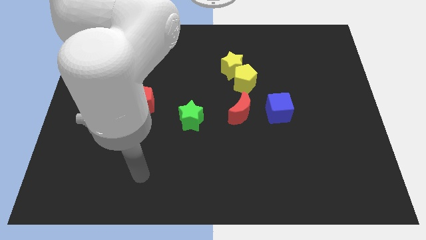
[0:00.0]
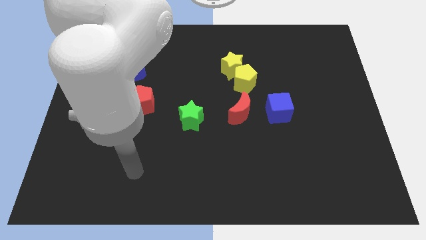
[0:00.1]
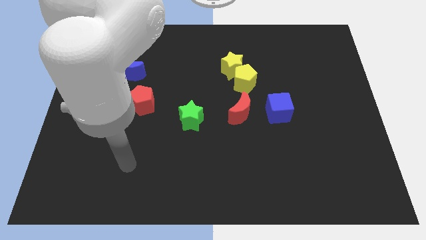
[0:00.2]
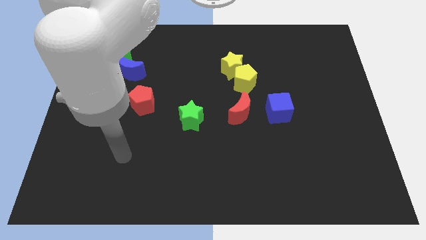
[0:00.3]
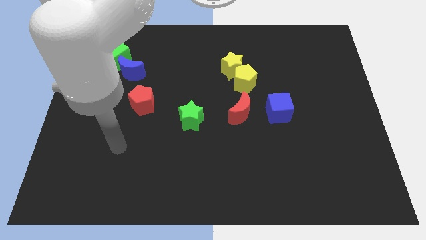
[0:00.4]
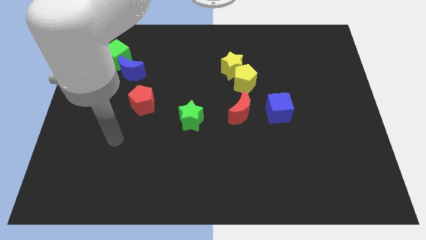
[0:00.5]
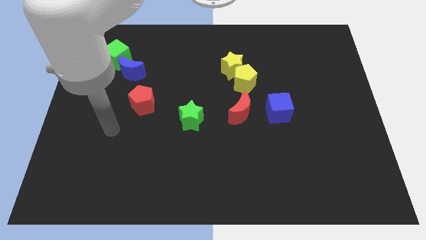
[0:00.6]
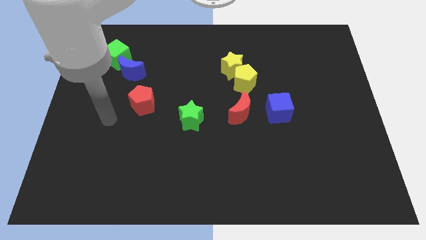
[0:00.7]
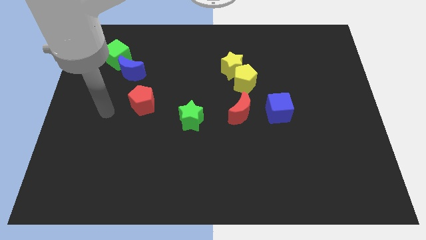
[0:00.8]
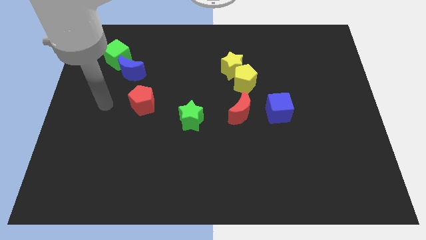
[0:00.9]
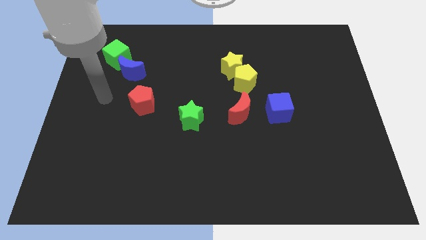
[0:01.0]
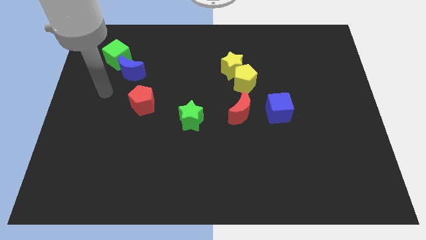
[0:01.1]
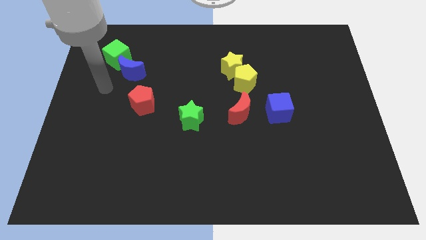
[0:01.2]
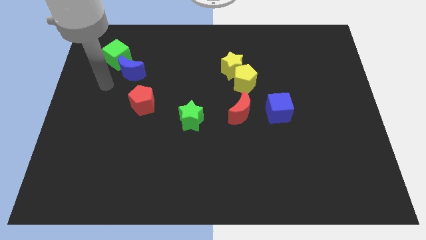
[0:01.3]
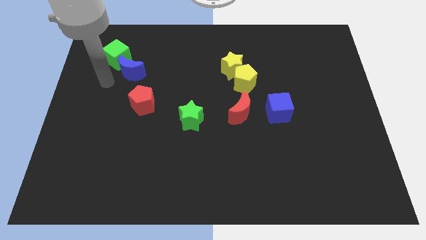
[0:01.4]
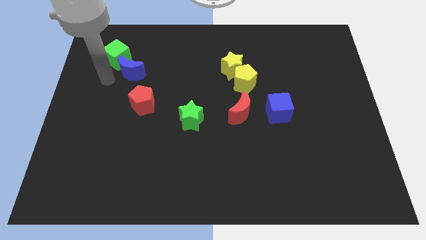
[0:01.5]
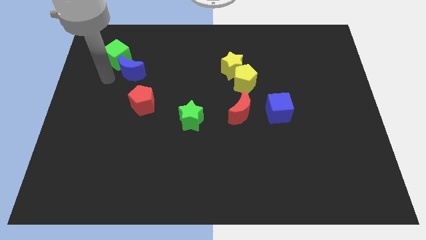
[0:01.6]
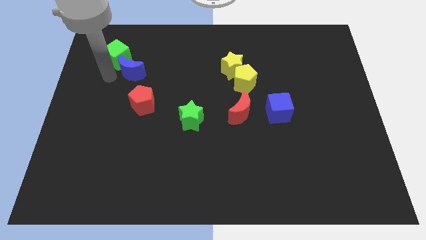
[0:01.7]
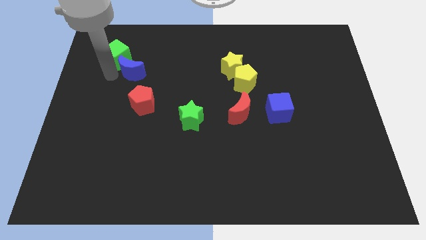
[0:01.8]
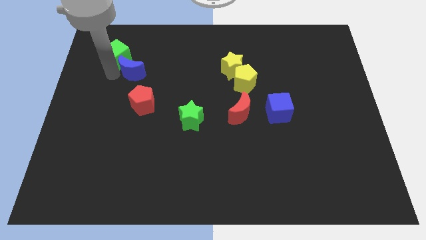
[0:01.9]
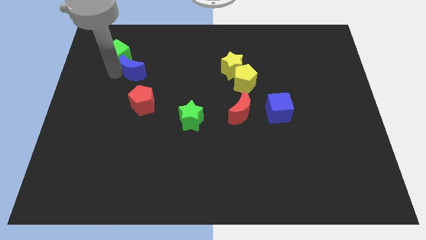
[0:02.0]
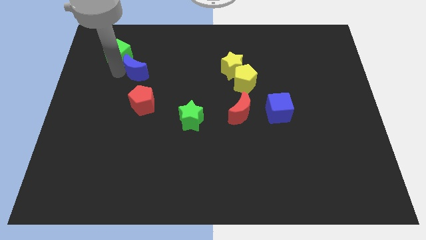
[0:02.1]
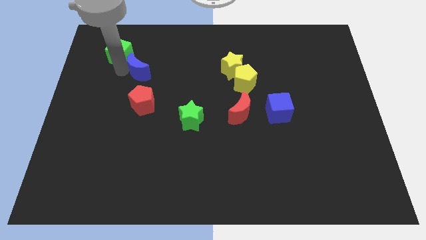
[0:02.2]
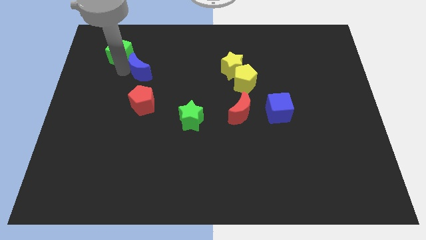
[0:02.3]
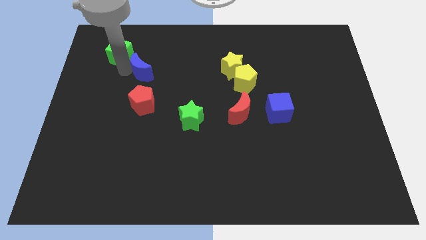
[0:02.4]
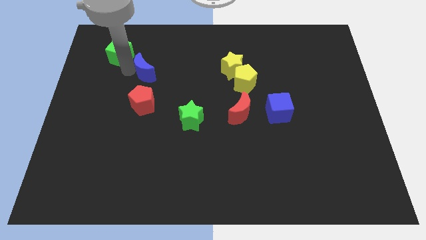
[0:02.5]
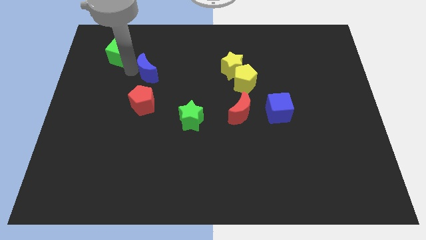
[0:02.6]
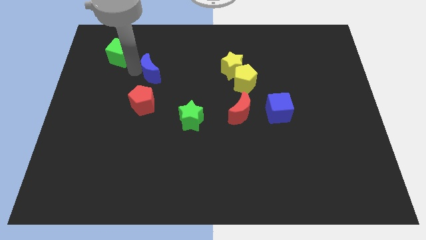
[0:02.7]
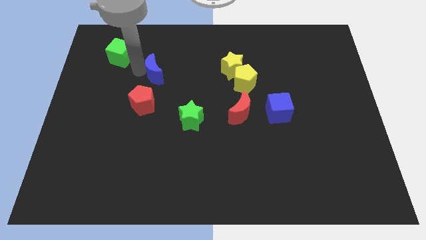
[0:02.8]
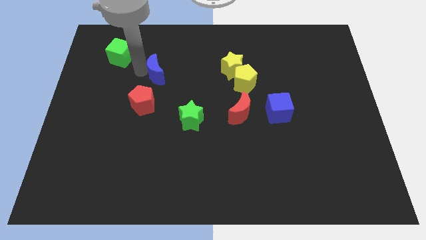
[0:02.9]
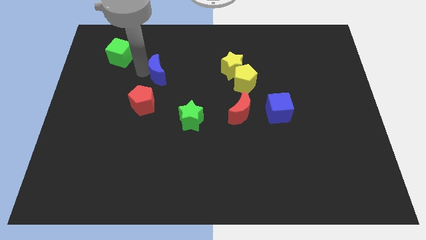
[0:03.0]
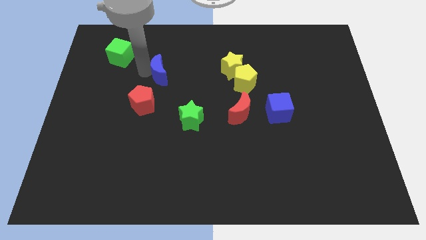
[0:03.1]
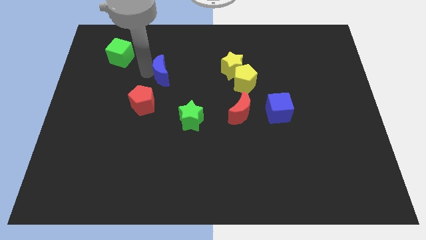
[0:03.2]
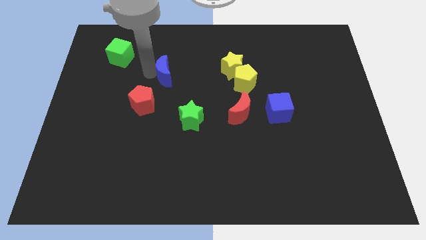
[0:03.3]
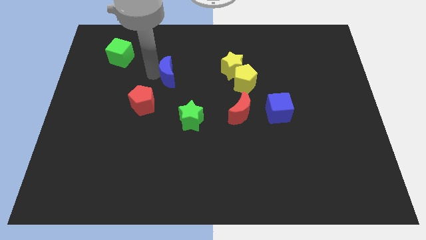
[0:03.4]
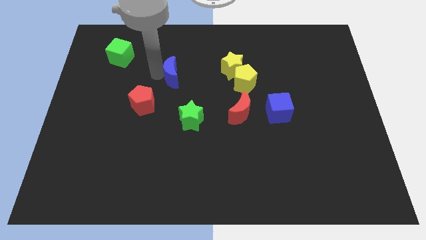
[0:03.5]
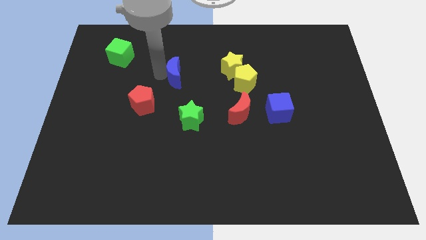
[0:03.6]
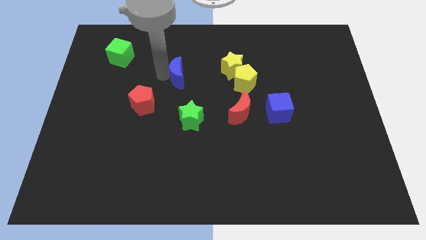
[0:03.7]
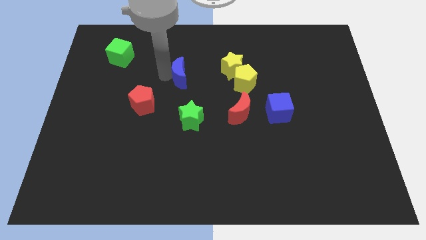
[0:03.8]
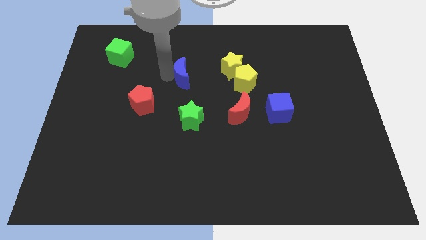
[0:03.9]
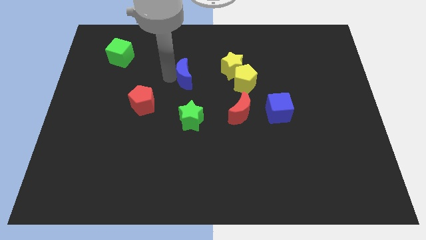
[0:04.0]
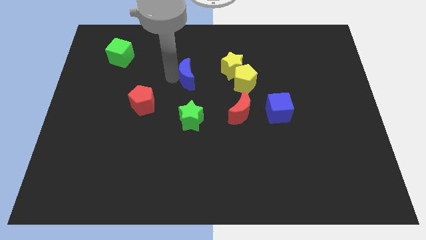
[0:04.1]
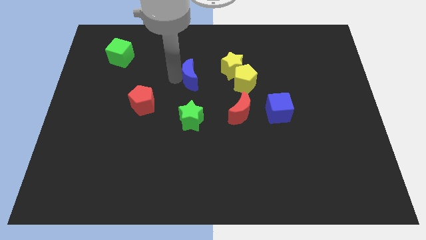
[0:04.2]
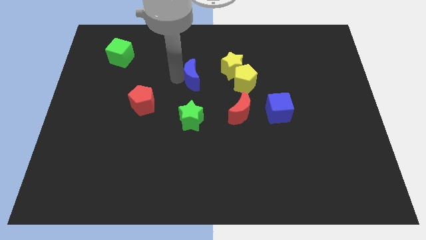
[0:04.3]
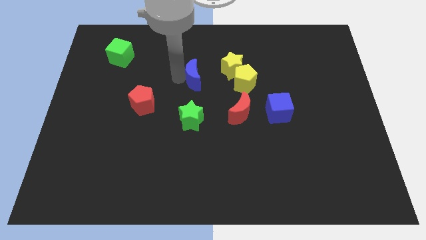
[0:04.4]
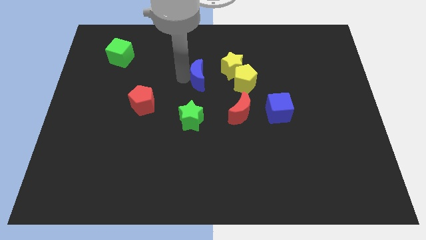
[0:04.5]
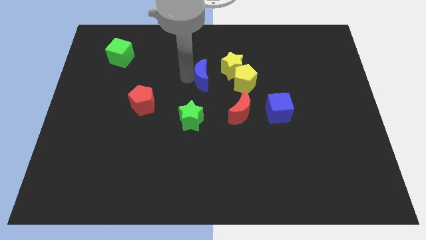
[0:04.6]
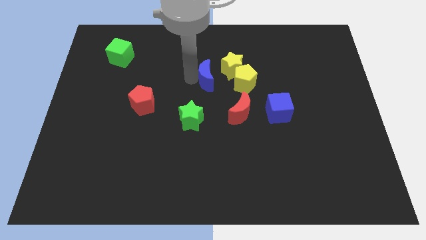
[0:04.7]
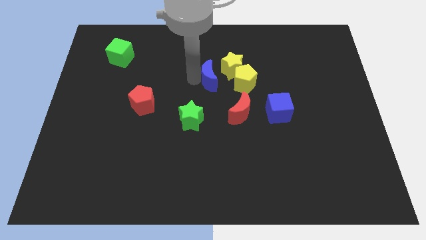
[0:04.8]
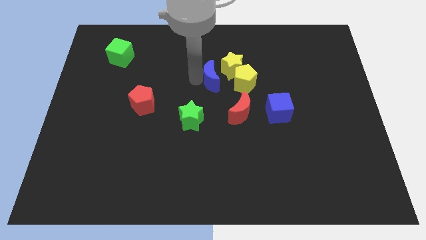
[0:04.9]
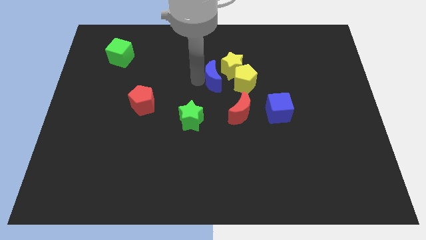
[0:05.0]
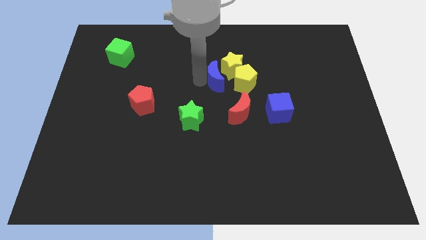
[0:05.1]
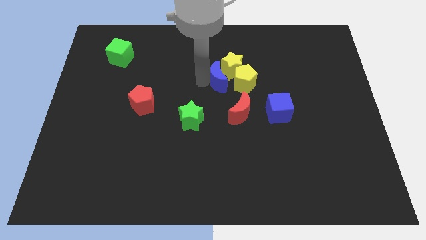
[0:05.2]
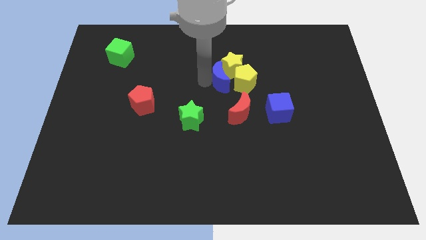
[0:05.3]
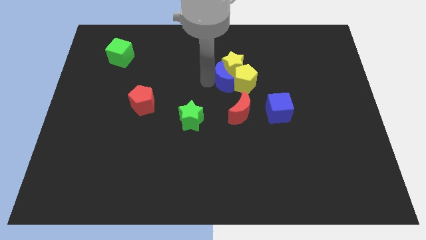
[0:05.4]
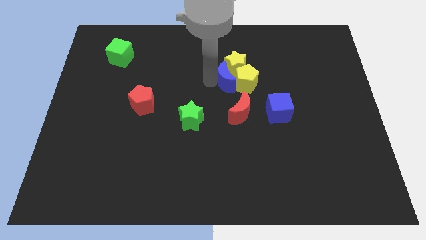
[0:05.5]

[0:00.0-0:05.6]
move the blue moon next to the yellow pentagon

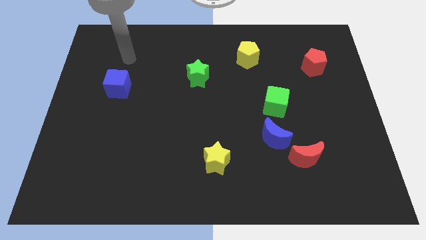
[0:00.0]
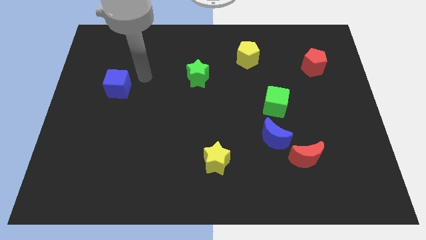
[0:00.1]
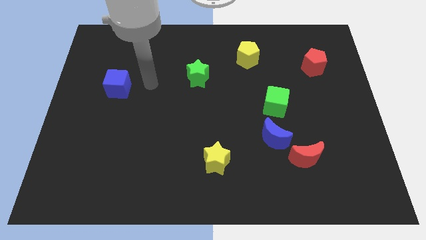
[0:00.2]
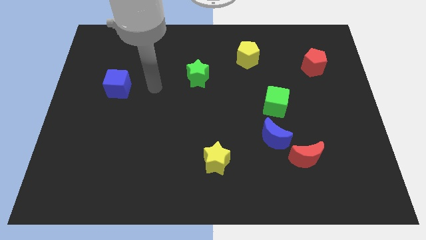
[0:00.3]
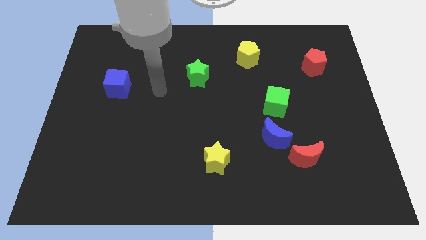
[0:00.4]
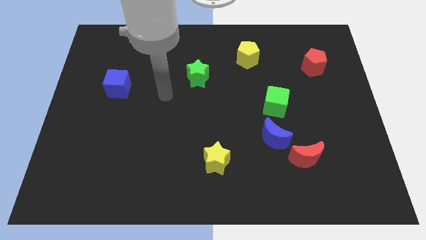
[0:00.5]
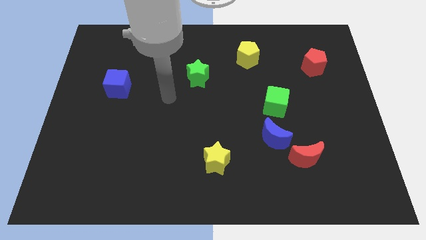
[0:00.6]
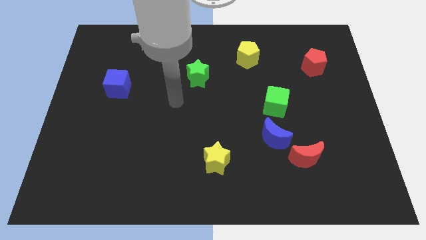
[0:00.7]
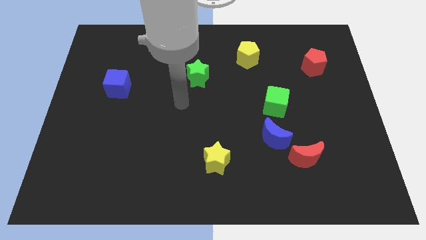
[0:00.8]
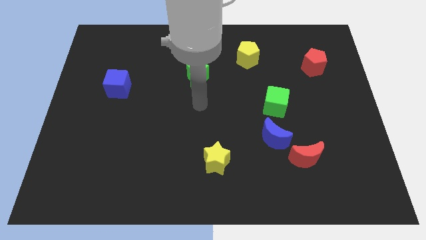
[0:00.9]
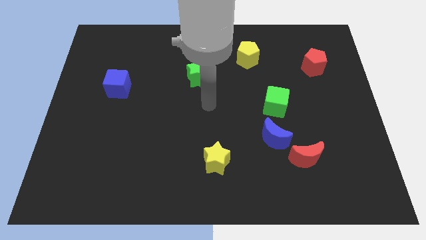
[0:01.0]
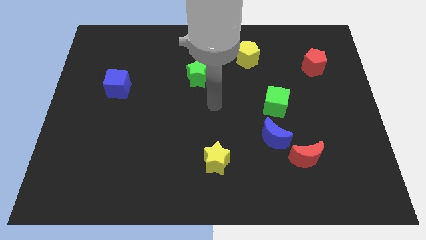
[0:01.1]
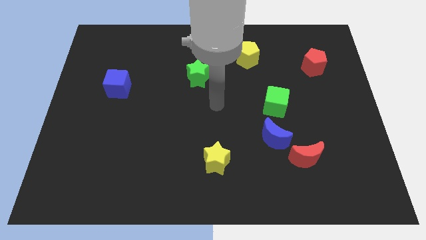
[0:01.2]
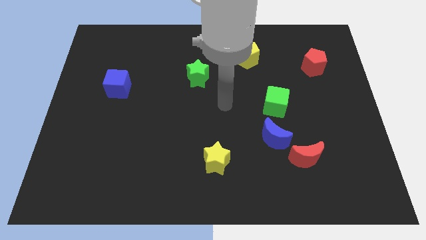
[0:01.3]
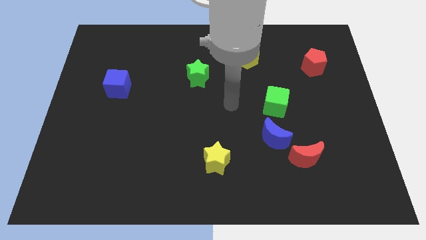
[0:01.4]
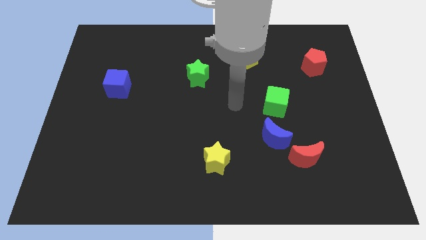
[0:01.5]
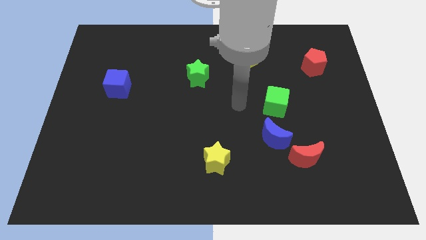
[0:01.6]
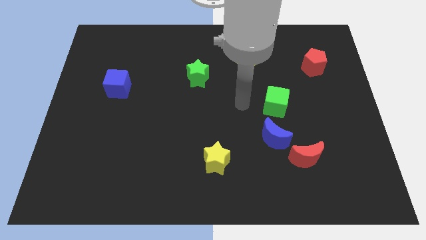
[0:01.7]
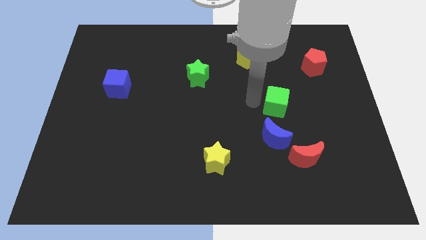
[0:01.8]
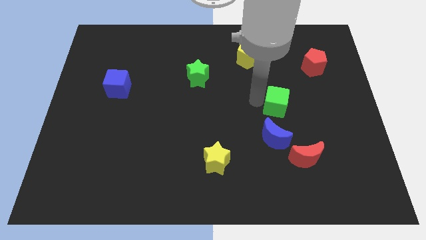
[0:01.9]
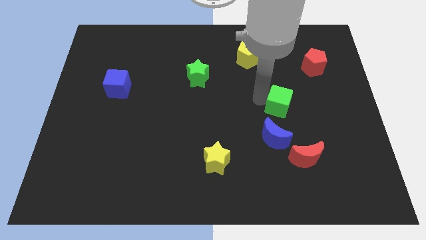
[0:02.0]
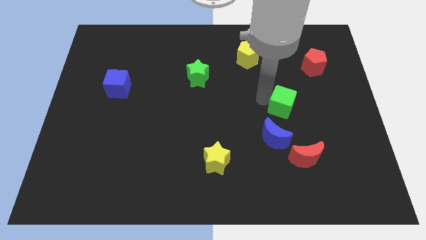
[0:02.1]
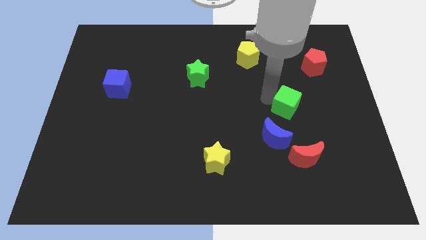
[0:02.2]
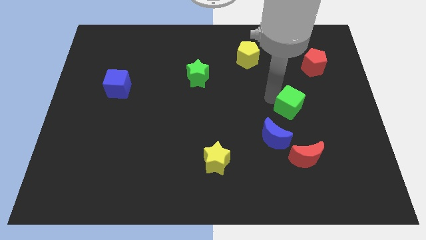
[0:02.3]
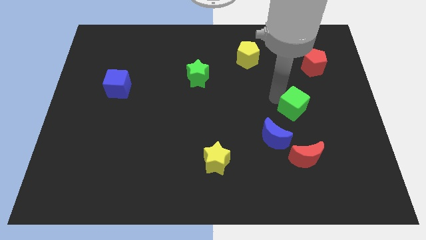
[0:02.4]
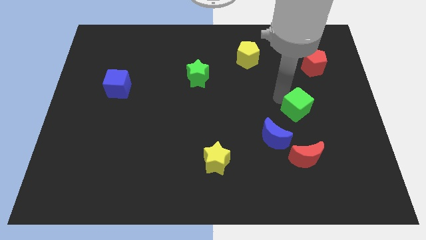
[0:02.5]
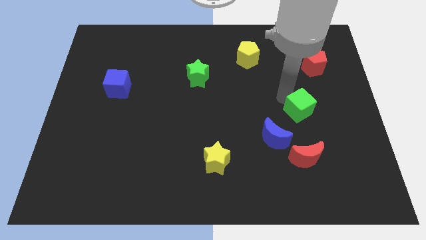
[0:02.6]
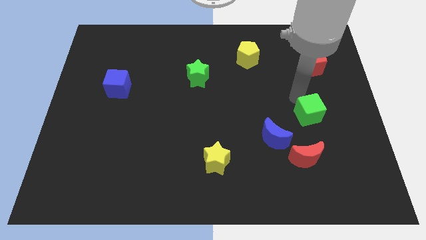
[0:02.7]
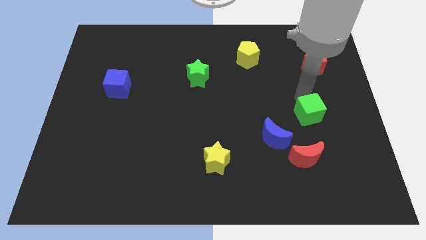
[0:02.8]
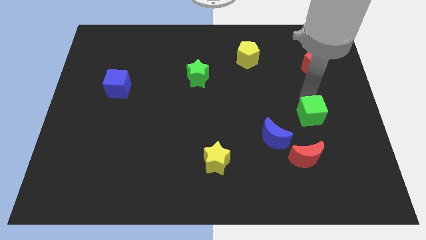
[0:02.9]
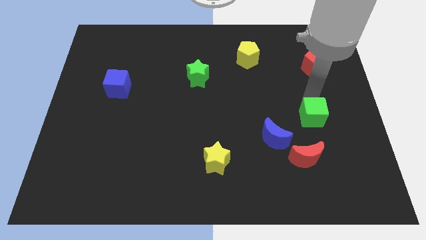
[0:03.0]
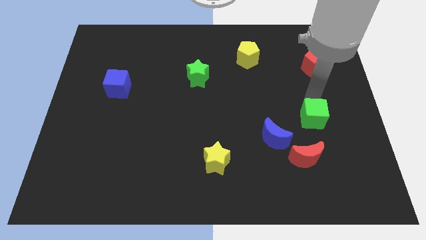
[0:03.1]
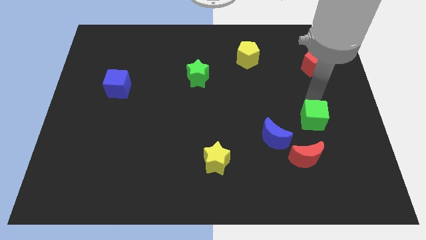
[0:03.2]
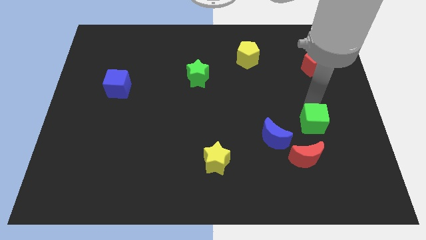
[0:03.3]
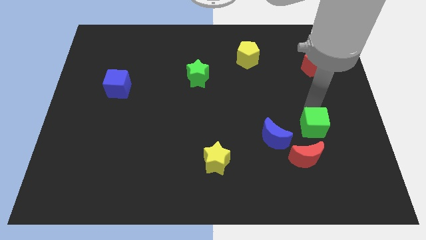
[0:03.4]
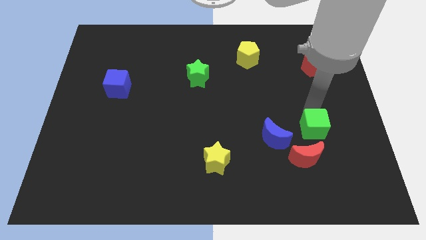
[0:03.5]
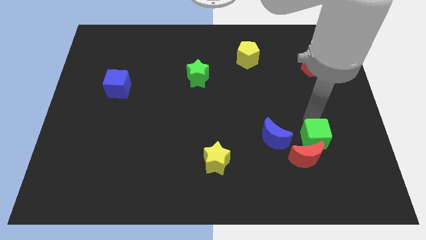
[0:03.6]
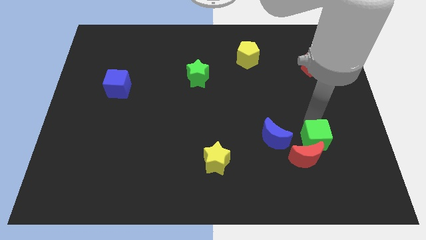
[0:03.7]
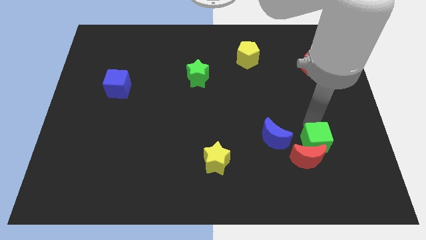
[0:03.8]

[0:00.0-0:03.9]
push the green cube towards the red moon
